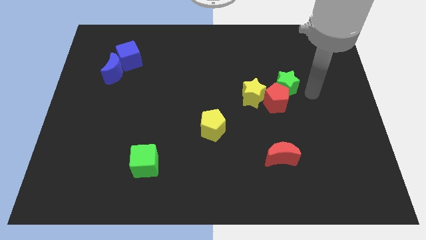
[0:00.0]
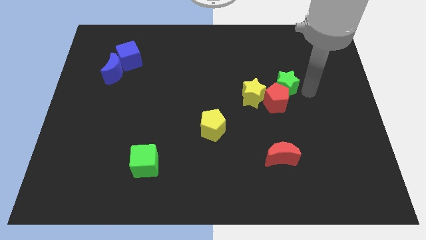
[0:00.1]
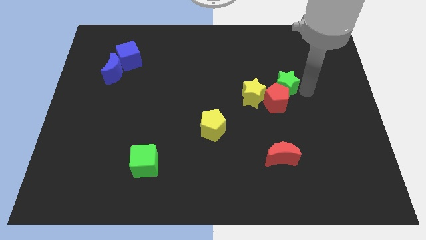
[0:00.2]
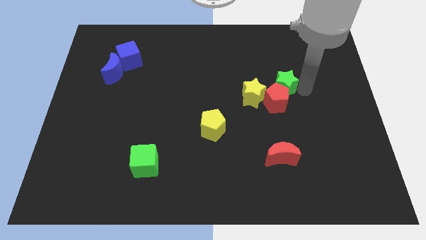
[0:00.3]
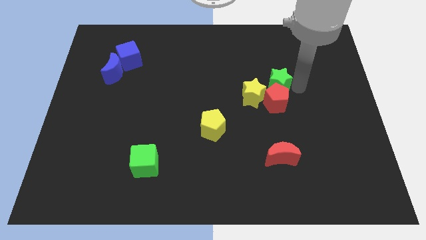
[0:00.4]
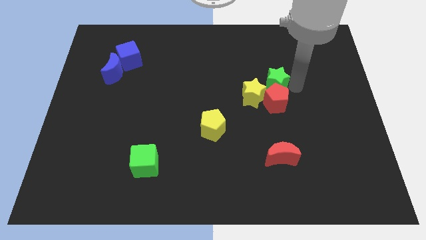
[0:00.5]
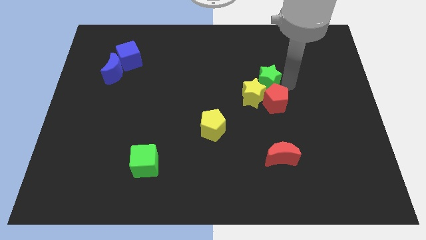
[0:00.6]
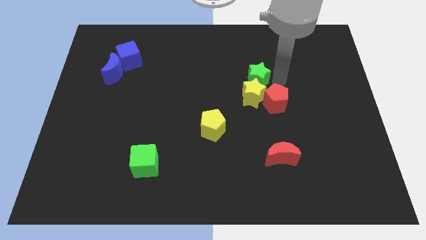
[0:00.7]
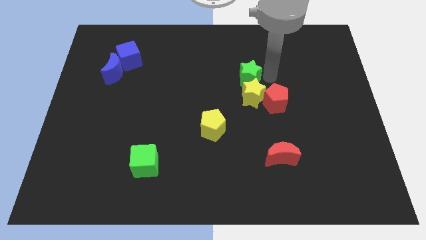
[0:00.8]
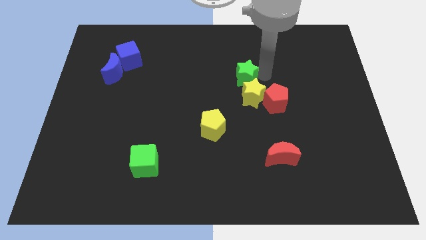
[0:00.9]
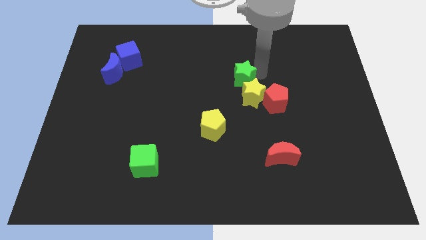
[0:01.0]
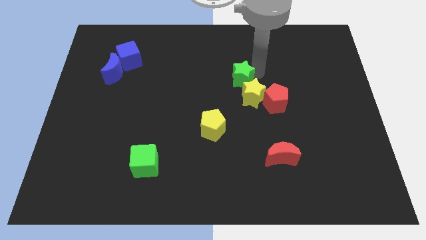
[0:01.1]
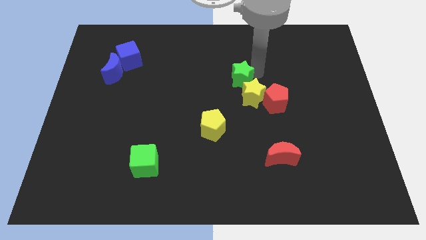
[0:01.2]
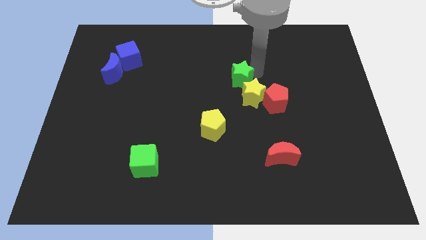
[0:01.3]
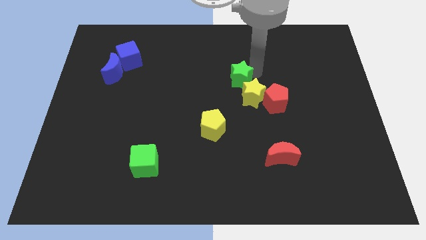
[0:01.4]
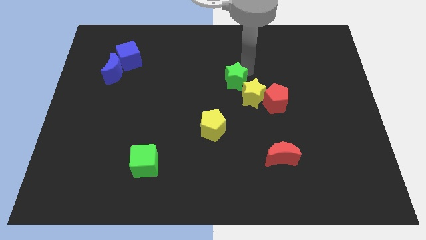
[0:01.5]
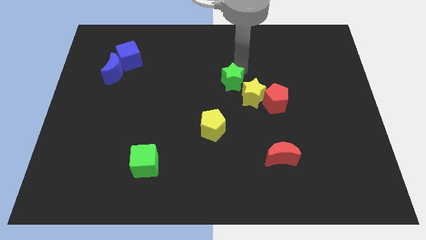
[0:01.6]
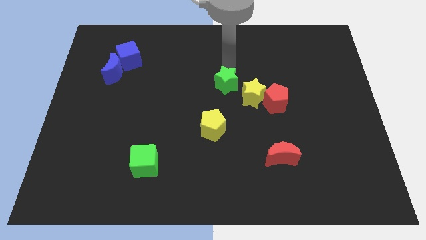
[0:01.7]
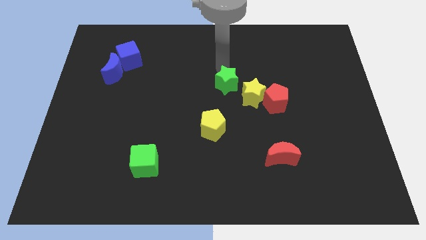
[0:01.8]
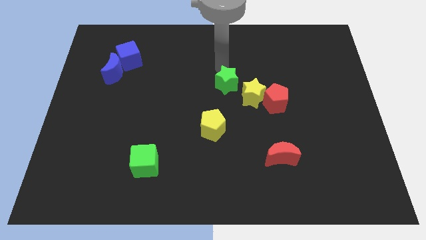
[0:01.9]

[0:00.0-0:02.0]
push the green star to the top left of the yellow star

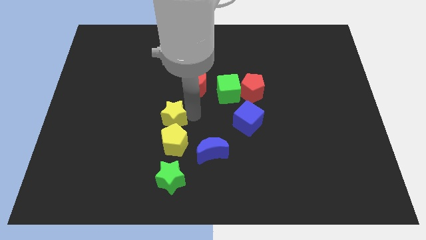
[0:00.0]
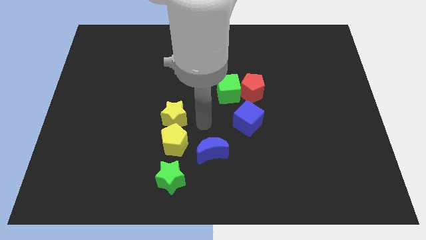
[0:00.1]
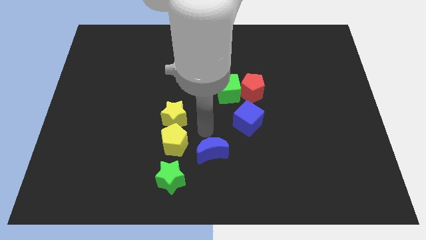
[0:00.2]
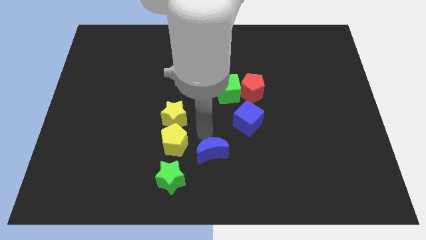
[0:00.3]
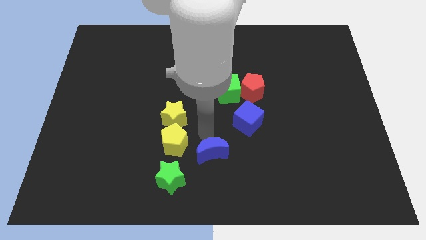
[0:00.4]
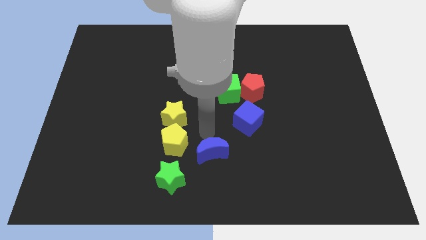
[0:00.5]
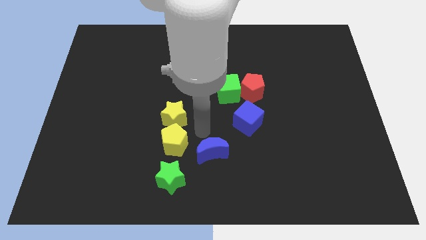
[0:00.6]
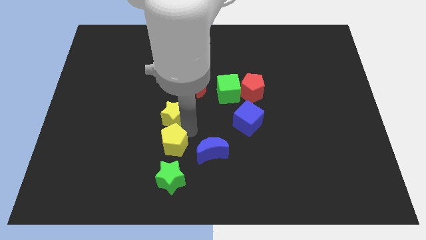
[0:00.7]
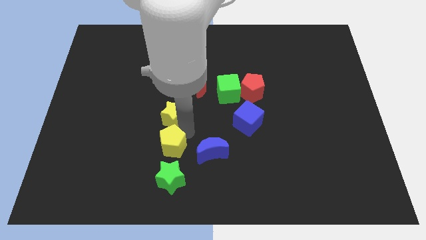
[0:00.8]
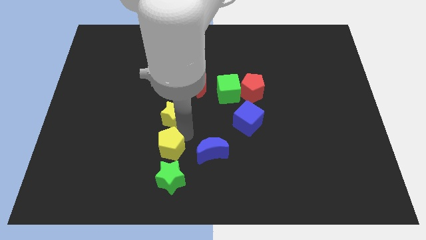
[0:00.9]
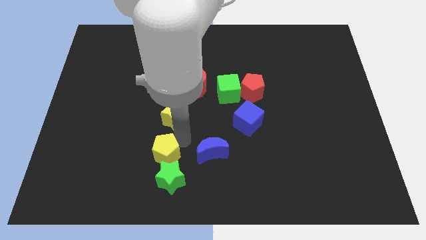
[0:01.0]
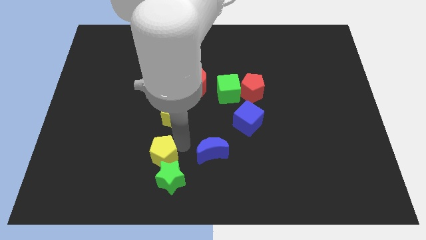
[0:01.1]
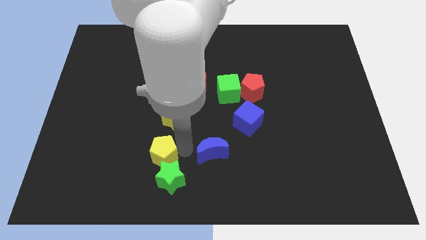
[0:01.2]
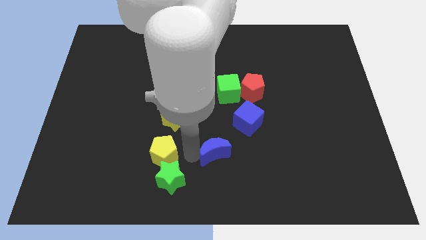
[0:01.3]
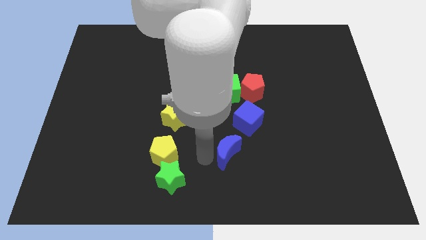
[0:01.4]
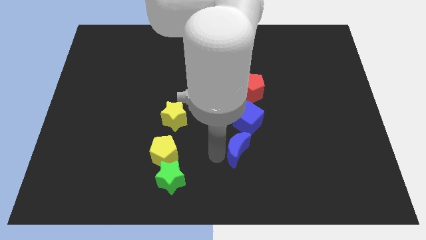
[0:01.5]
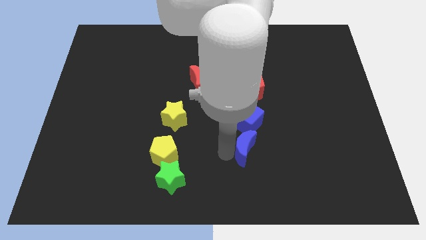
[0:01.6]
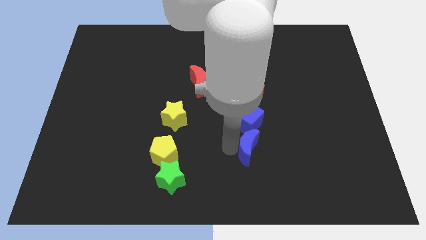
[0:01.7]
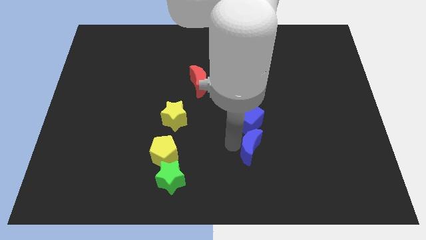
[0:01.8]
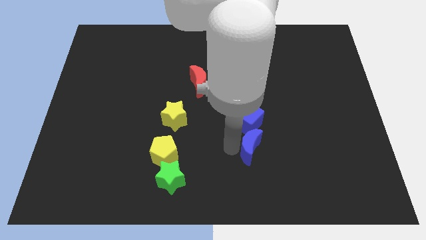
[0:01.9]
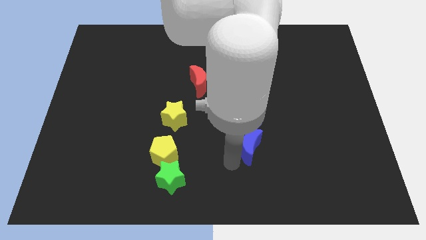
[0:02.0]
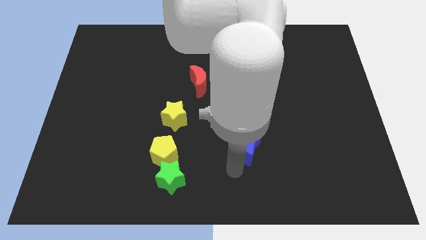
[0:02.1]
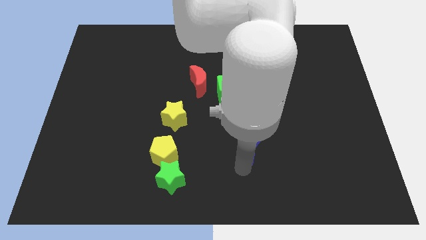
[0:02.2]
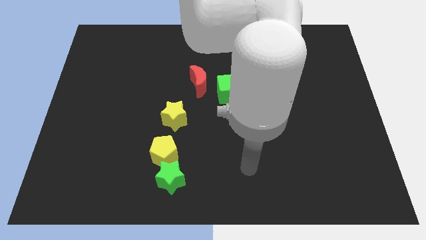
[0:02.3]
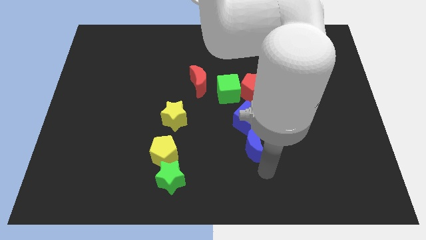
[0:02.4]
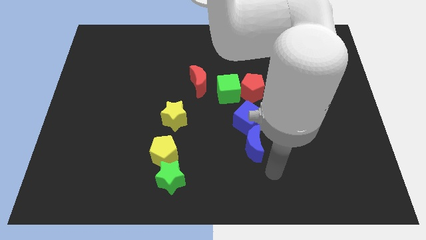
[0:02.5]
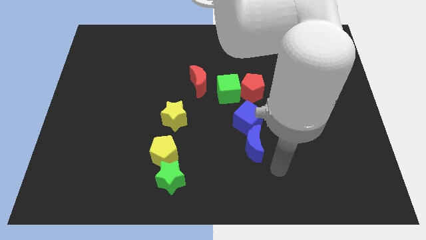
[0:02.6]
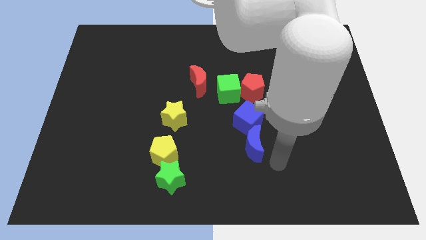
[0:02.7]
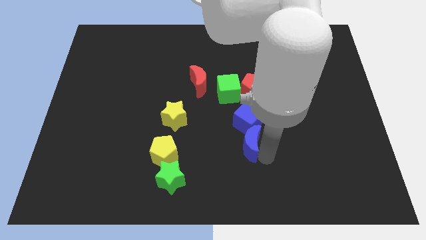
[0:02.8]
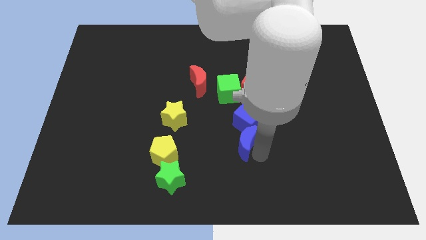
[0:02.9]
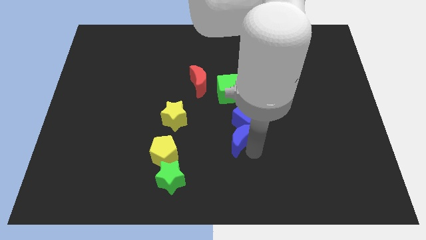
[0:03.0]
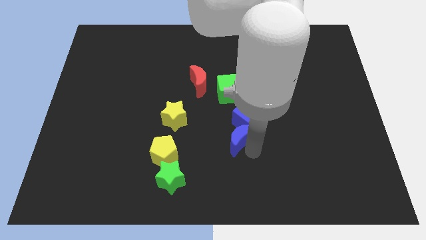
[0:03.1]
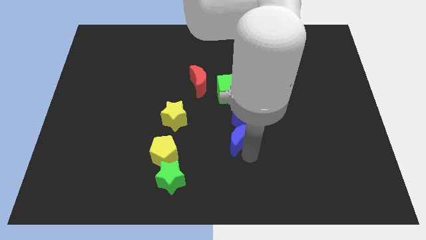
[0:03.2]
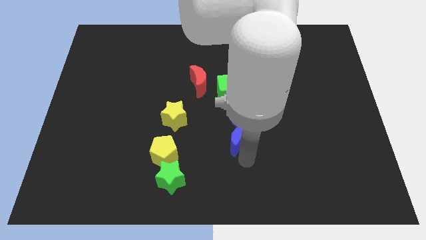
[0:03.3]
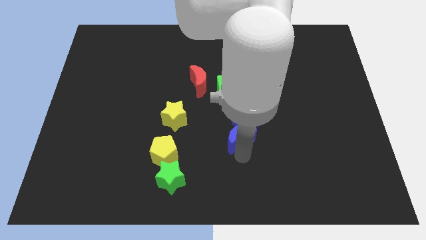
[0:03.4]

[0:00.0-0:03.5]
put the blue moon below the blue cube

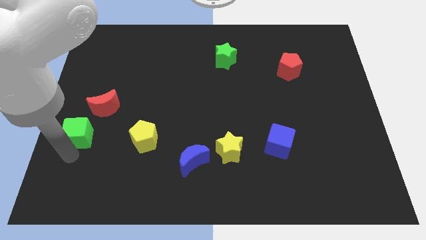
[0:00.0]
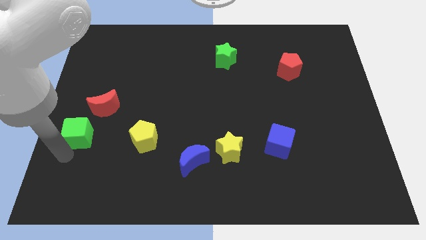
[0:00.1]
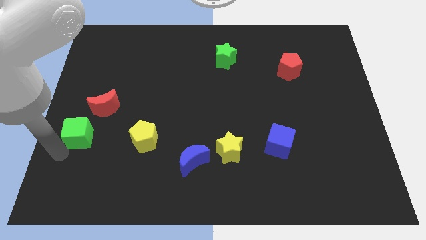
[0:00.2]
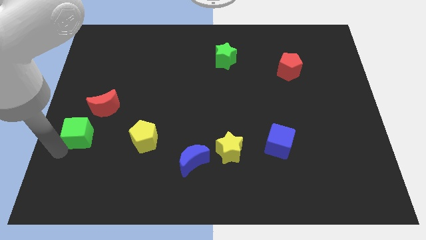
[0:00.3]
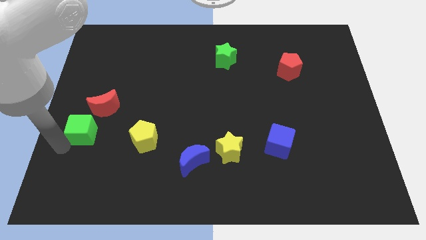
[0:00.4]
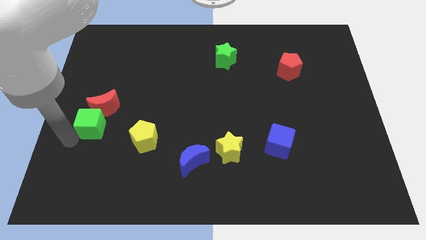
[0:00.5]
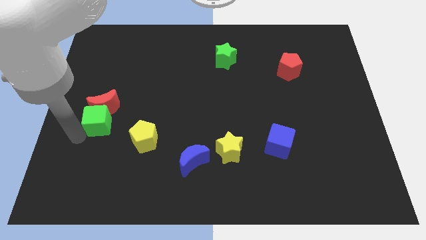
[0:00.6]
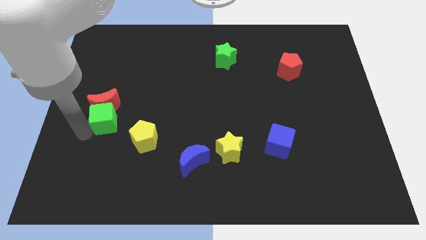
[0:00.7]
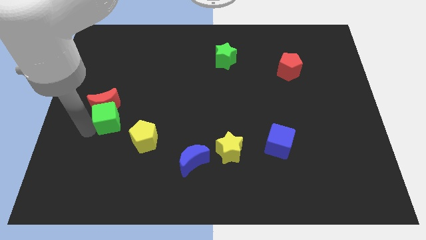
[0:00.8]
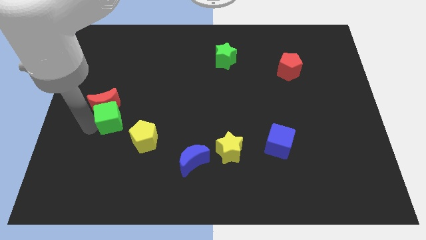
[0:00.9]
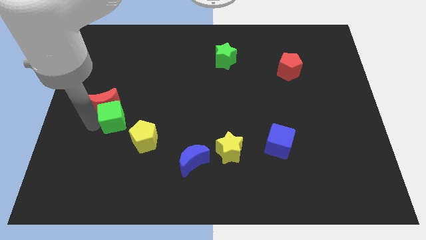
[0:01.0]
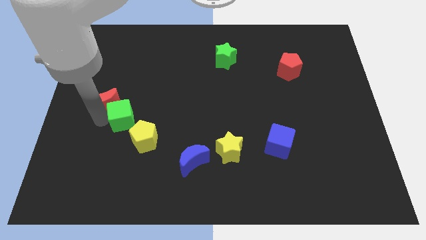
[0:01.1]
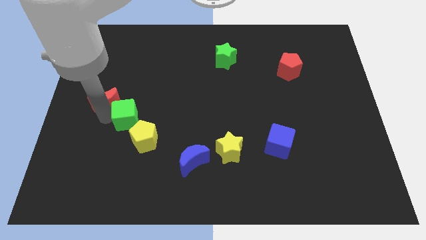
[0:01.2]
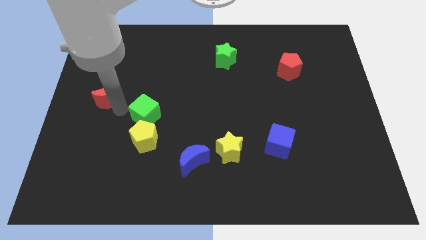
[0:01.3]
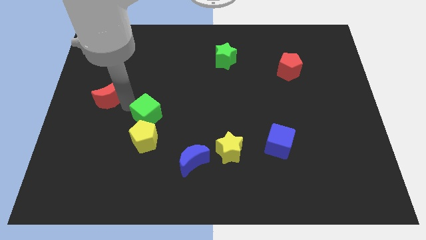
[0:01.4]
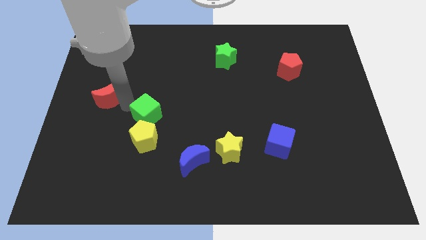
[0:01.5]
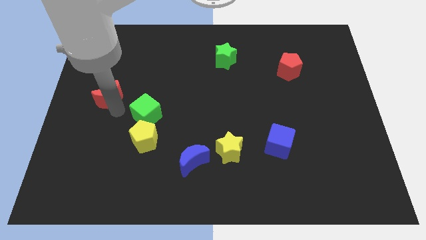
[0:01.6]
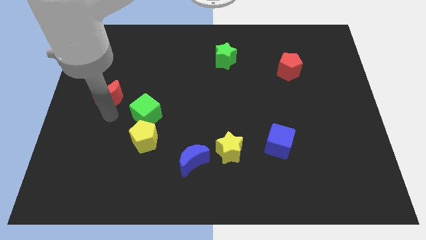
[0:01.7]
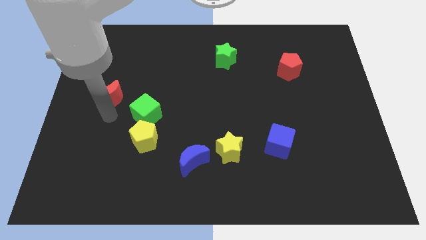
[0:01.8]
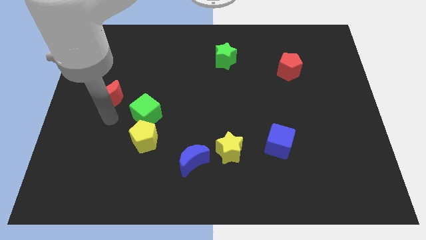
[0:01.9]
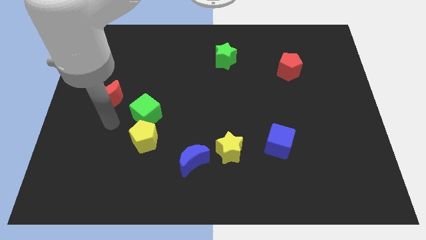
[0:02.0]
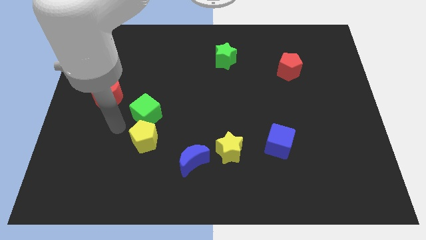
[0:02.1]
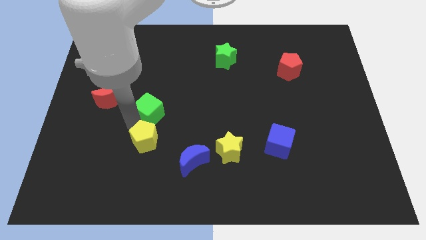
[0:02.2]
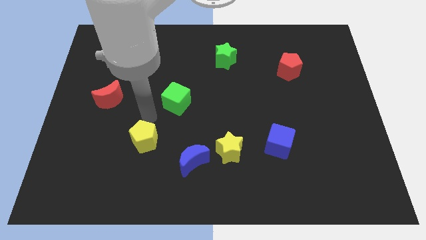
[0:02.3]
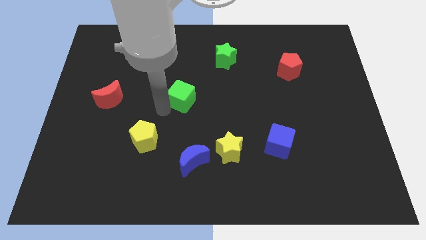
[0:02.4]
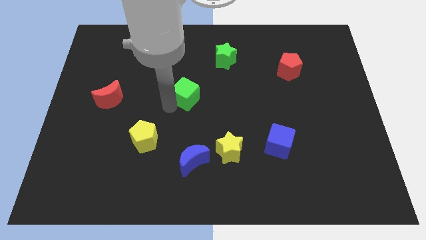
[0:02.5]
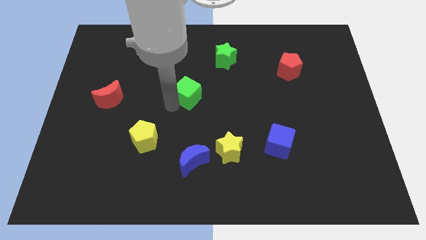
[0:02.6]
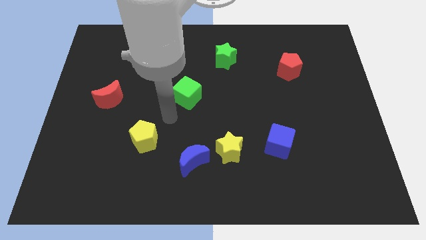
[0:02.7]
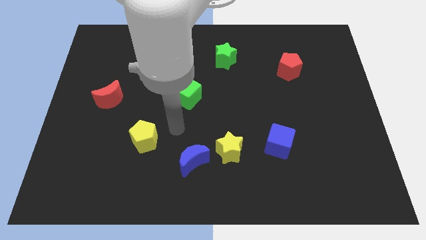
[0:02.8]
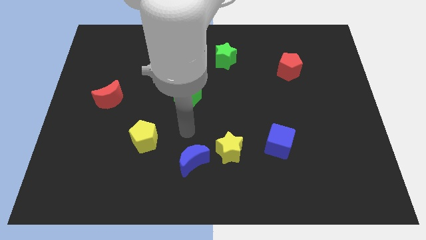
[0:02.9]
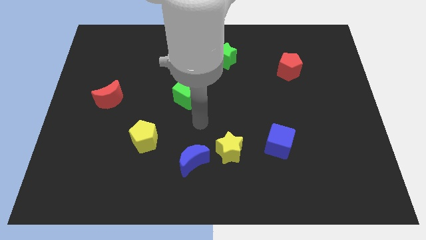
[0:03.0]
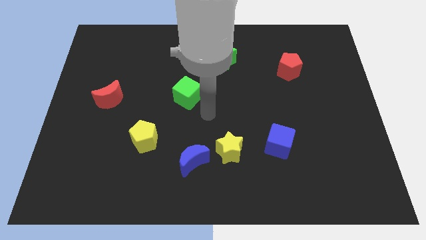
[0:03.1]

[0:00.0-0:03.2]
slide the green cube towards the center of the board

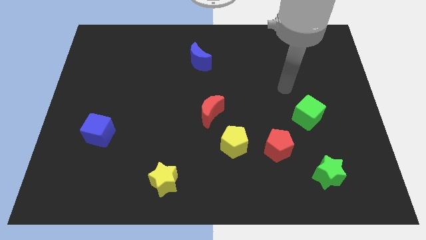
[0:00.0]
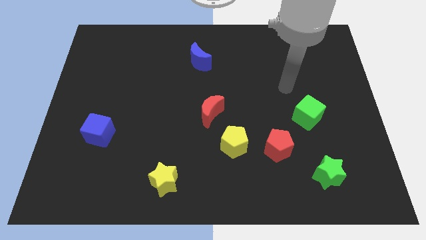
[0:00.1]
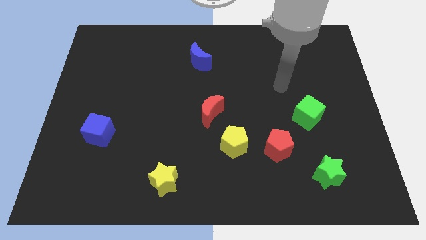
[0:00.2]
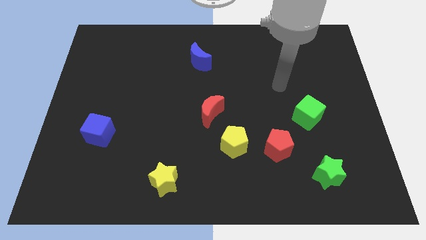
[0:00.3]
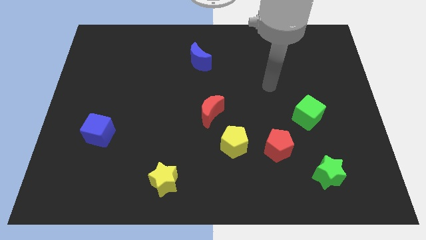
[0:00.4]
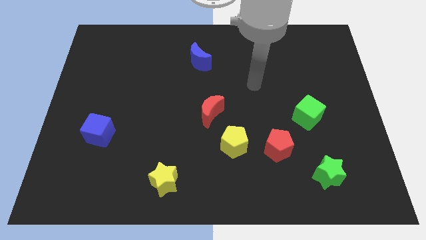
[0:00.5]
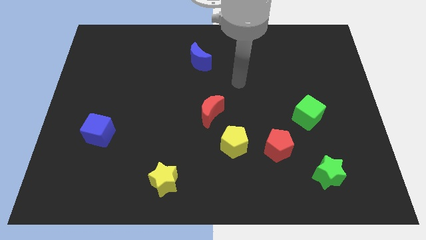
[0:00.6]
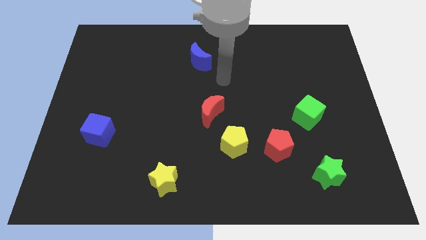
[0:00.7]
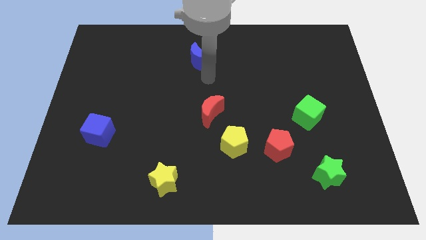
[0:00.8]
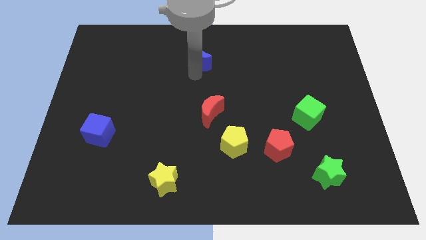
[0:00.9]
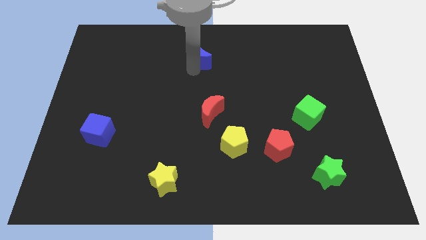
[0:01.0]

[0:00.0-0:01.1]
move your arm to the left side of the blue crescent
